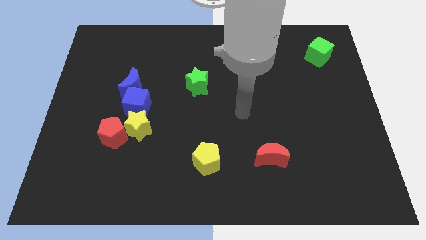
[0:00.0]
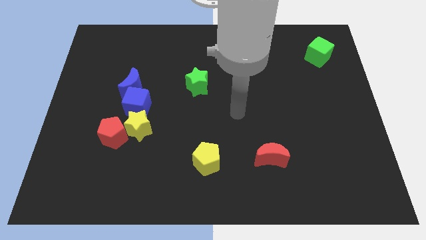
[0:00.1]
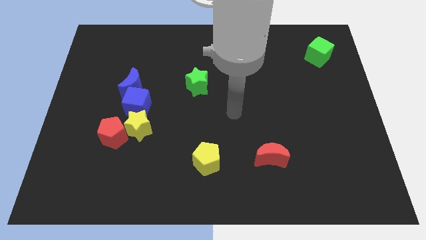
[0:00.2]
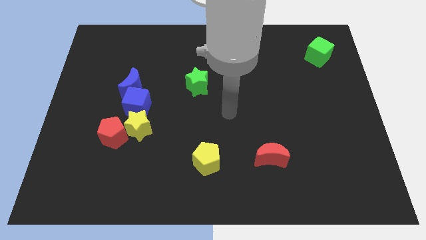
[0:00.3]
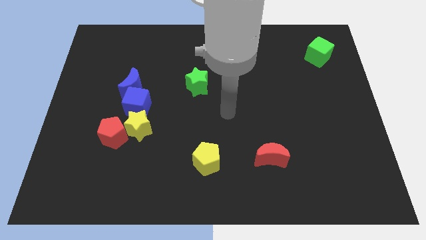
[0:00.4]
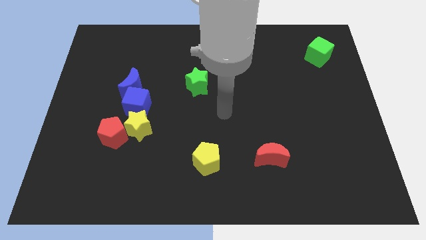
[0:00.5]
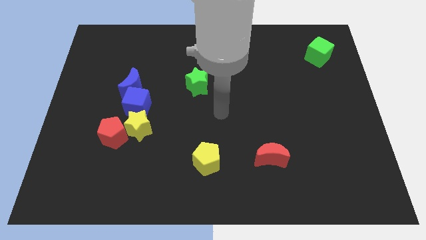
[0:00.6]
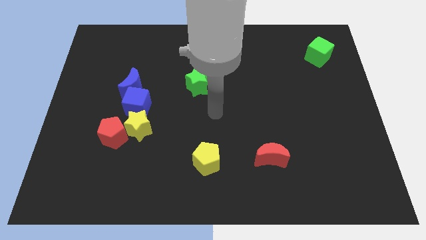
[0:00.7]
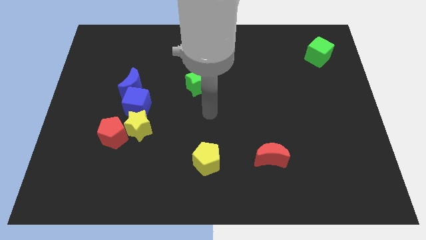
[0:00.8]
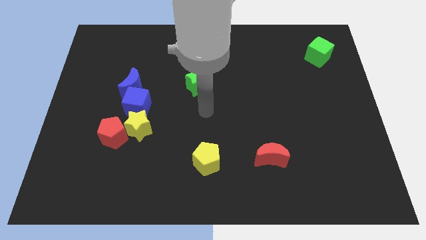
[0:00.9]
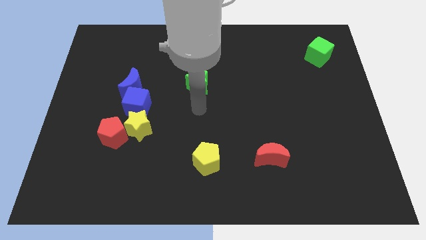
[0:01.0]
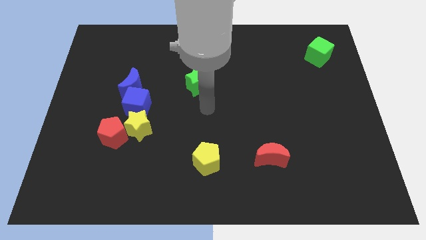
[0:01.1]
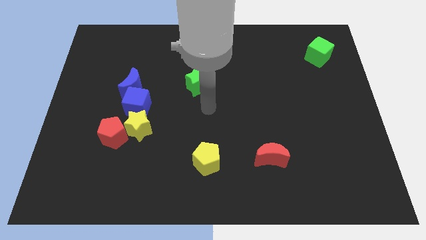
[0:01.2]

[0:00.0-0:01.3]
move the arm above the yellow pentagon

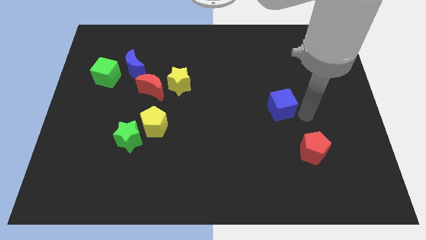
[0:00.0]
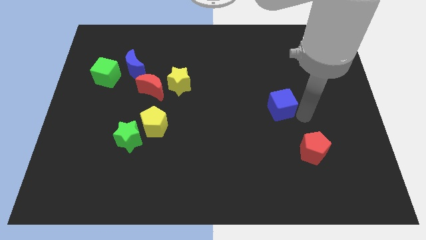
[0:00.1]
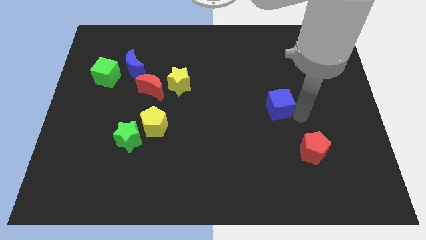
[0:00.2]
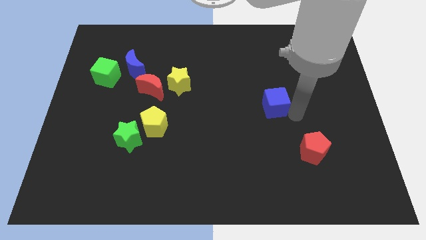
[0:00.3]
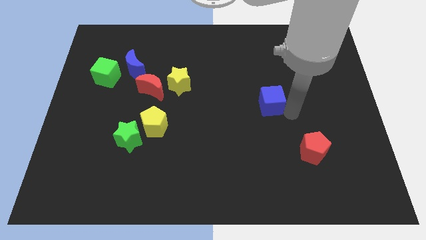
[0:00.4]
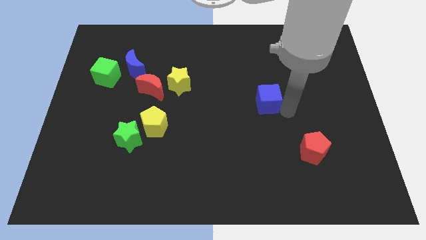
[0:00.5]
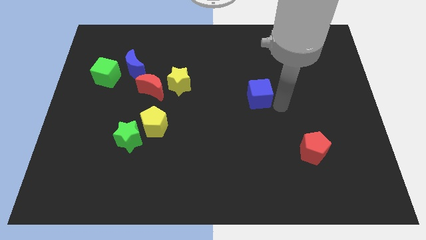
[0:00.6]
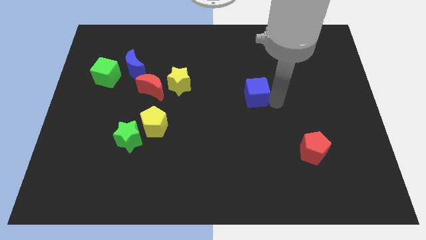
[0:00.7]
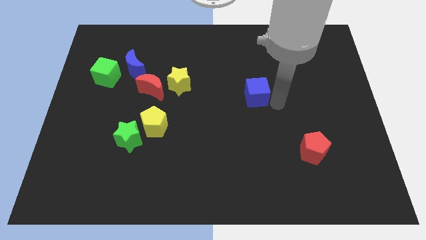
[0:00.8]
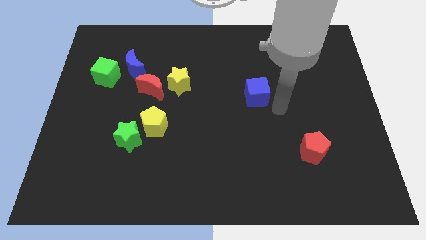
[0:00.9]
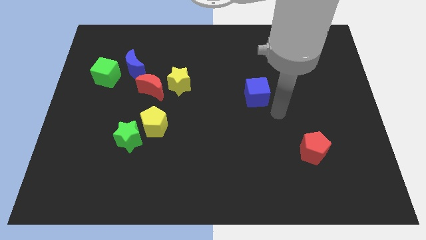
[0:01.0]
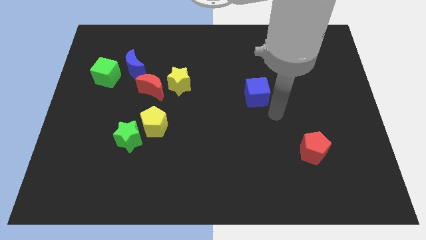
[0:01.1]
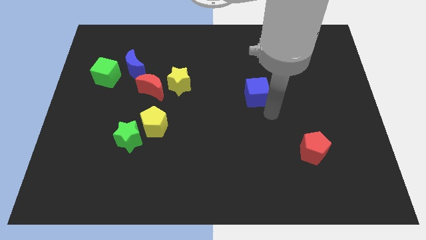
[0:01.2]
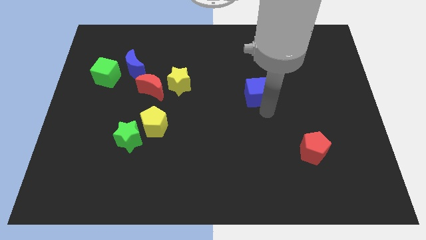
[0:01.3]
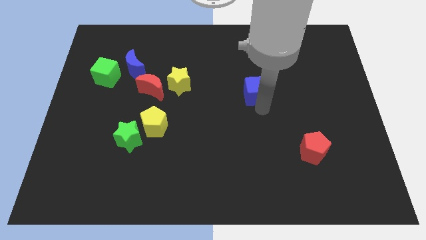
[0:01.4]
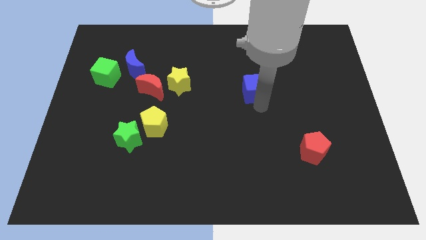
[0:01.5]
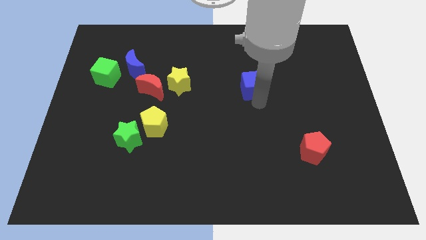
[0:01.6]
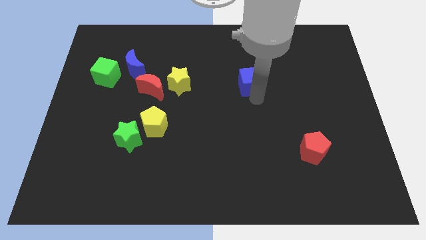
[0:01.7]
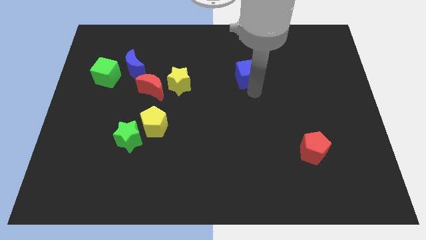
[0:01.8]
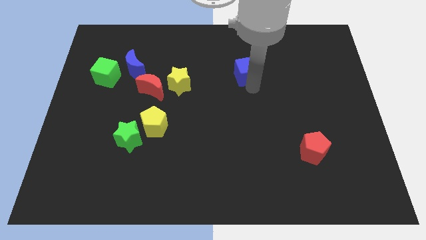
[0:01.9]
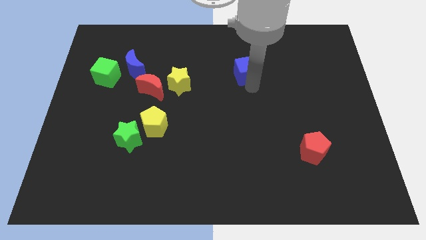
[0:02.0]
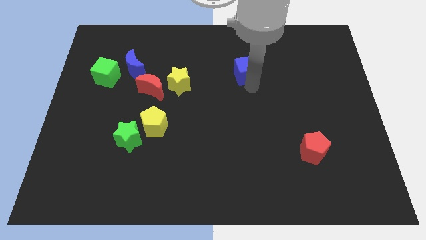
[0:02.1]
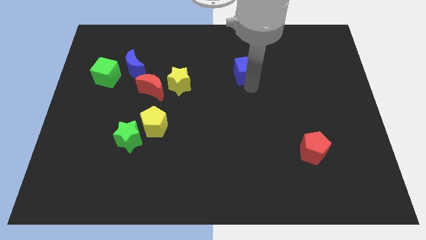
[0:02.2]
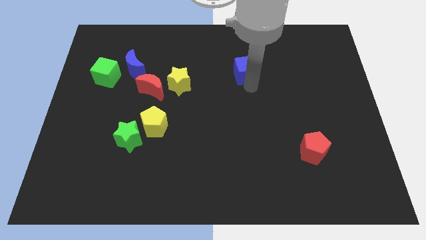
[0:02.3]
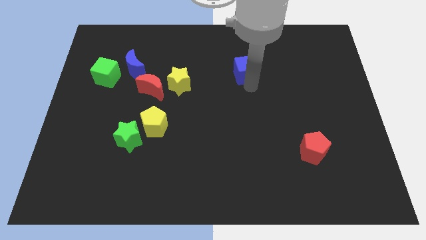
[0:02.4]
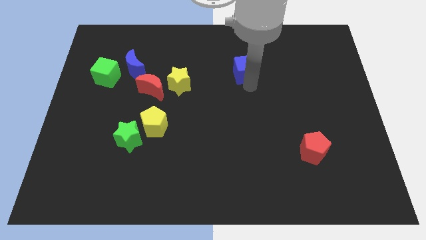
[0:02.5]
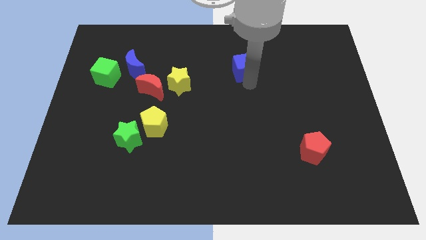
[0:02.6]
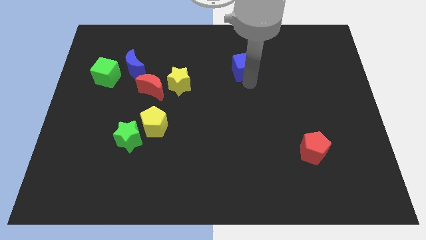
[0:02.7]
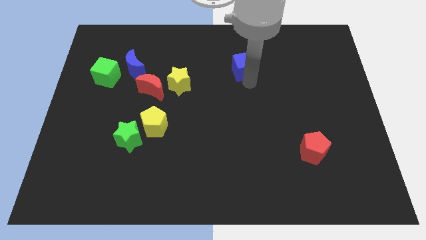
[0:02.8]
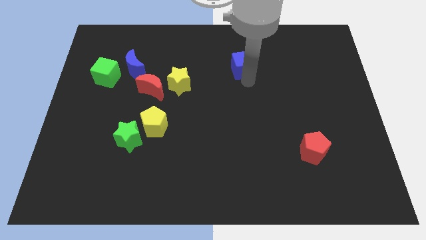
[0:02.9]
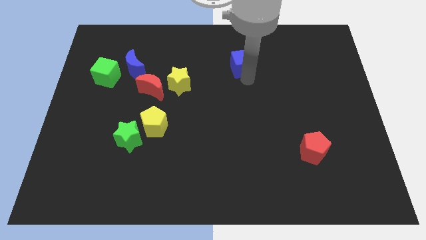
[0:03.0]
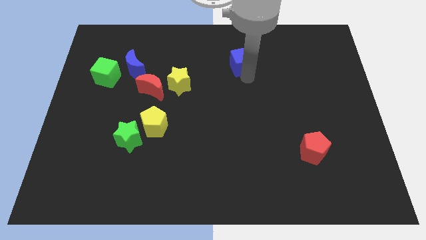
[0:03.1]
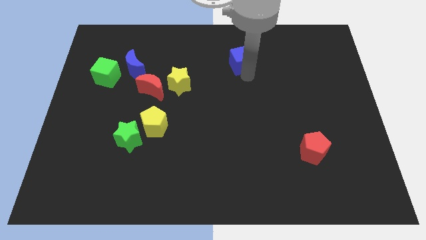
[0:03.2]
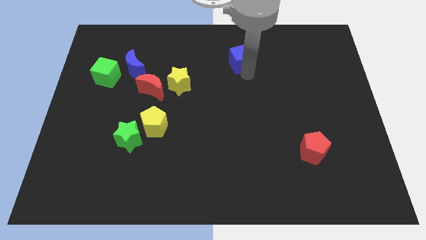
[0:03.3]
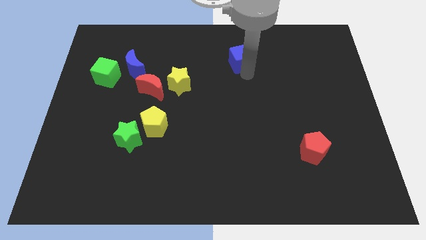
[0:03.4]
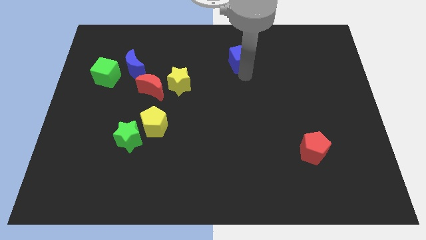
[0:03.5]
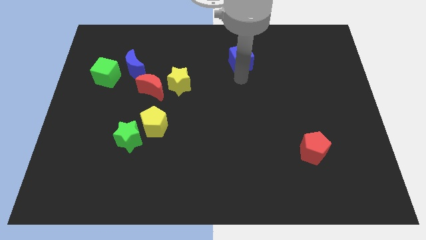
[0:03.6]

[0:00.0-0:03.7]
push the blue cube to the top right of the yellow star

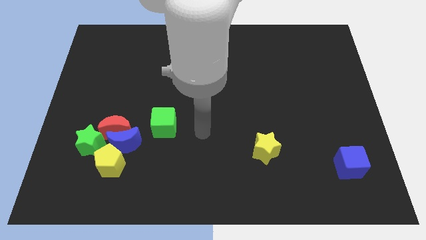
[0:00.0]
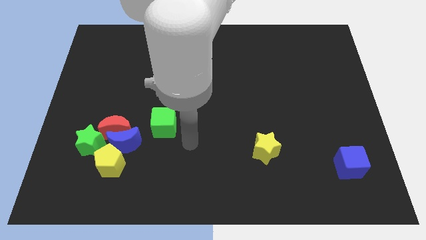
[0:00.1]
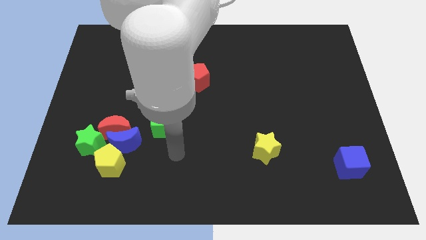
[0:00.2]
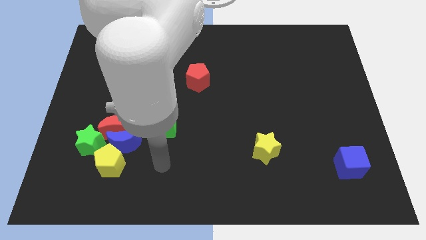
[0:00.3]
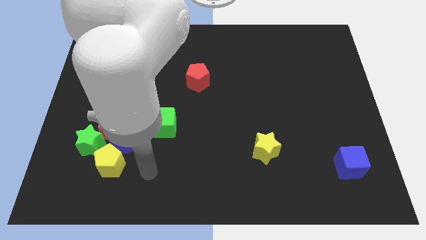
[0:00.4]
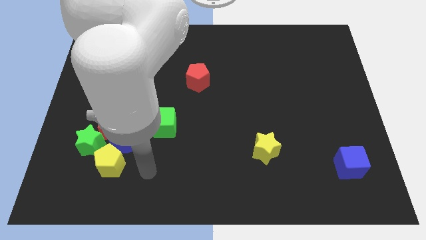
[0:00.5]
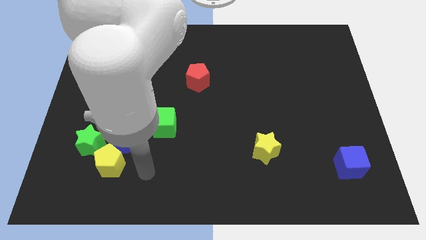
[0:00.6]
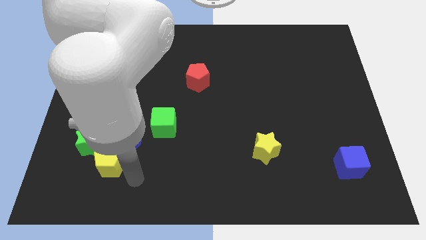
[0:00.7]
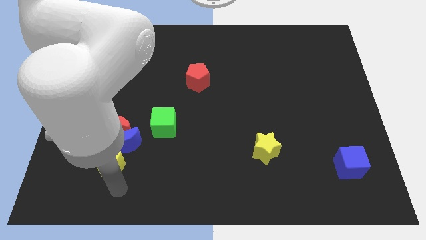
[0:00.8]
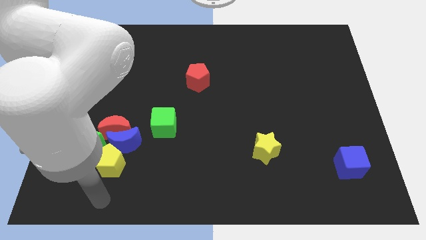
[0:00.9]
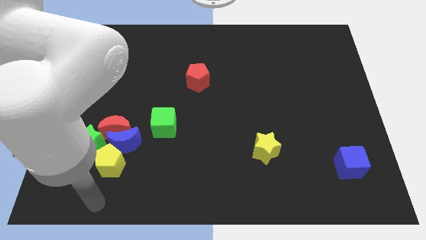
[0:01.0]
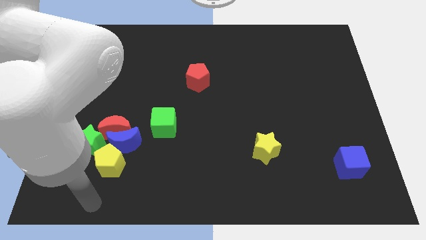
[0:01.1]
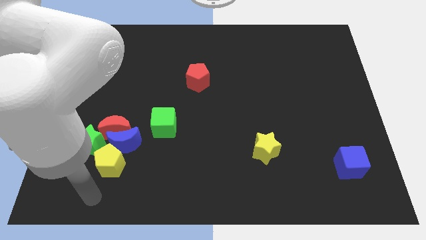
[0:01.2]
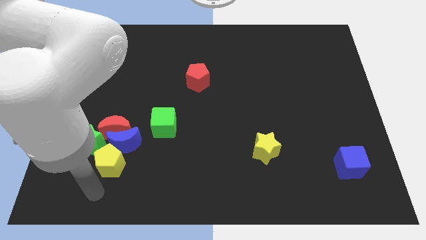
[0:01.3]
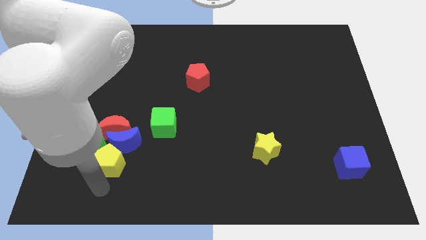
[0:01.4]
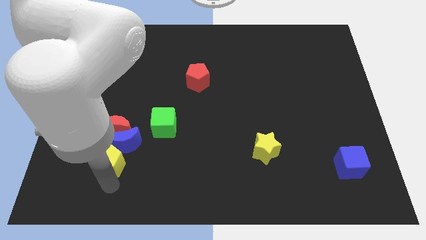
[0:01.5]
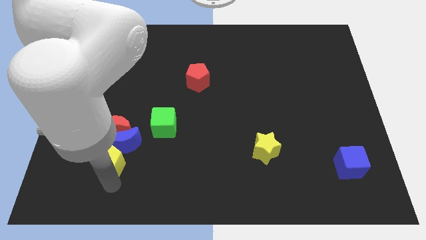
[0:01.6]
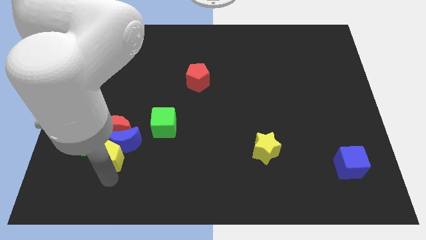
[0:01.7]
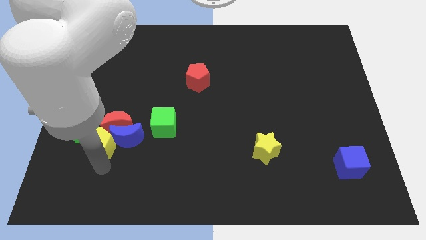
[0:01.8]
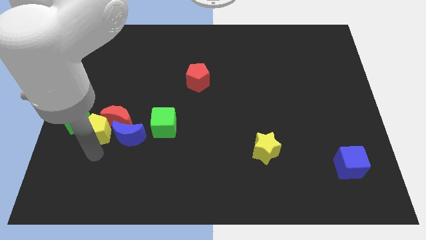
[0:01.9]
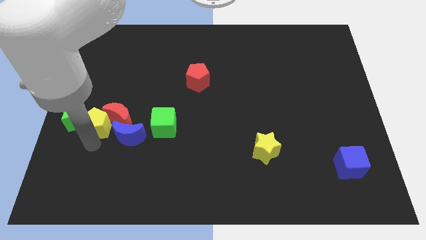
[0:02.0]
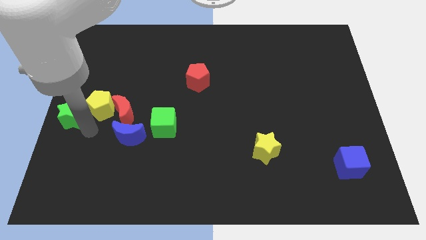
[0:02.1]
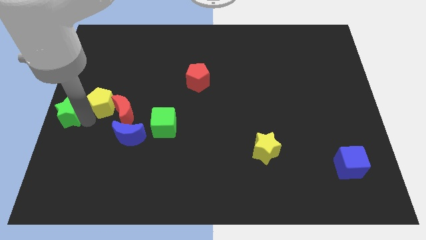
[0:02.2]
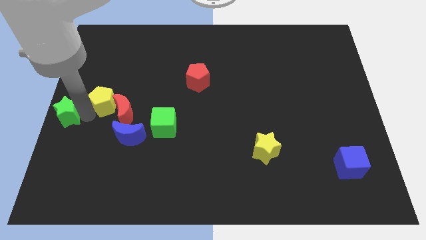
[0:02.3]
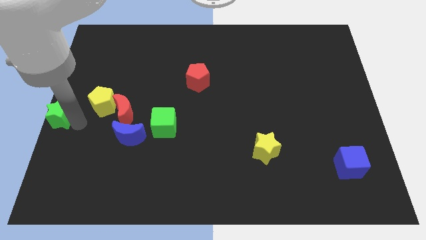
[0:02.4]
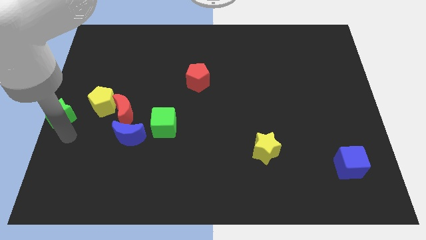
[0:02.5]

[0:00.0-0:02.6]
push yellow pentagon in to red crescent

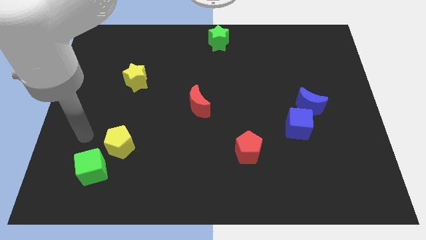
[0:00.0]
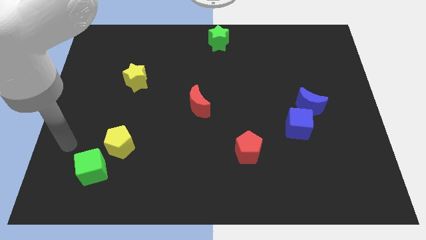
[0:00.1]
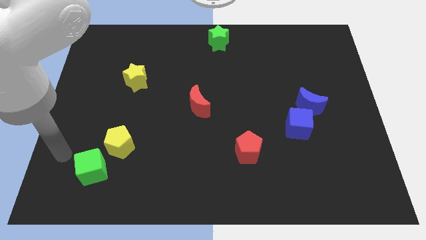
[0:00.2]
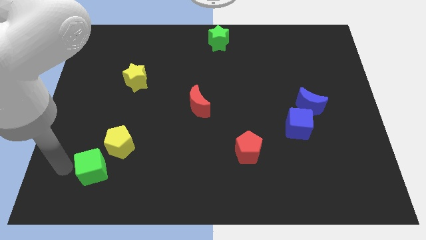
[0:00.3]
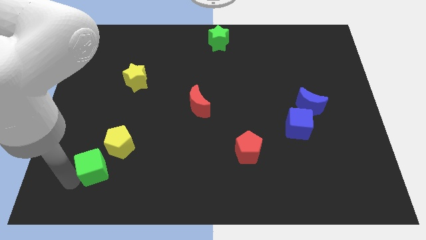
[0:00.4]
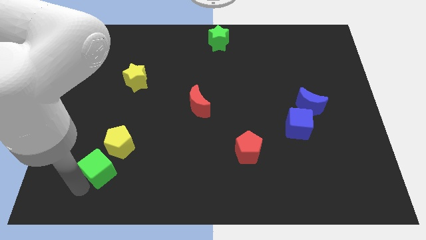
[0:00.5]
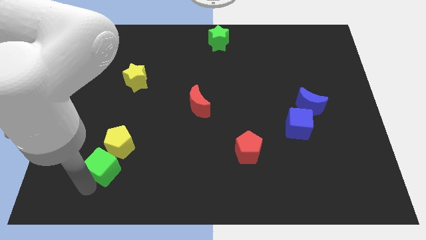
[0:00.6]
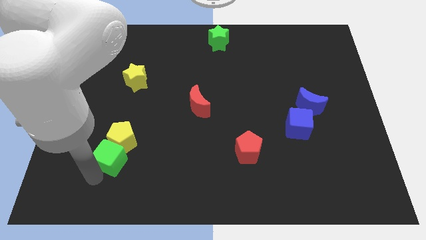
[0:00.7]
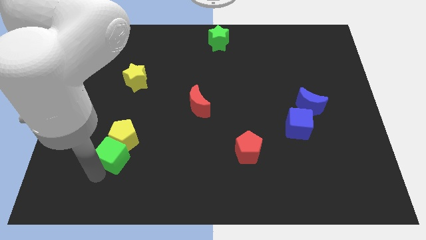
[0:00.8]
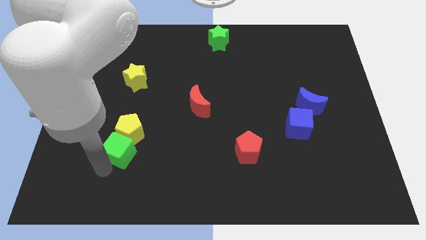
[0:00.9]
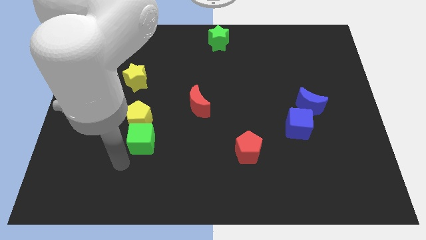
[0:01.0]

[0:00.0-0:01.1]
push the yellow pentagon and green cube towards the top side of the board

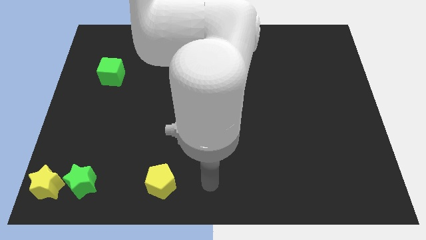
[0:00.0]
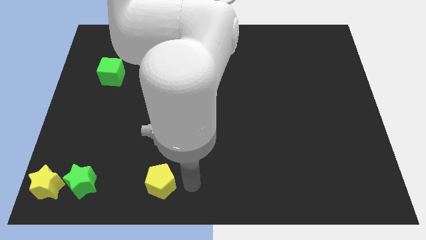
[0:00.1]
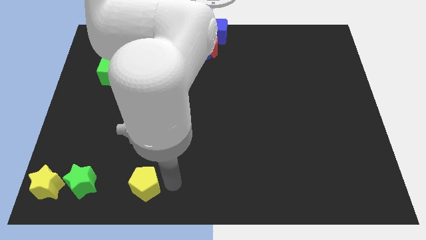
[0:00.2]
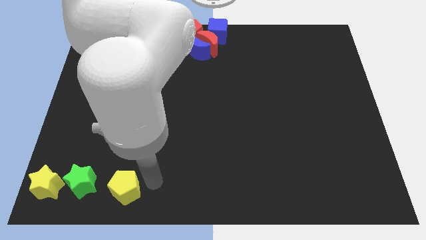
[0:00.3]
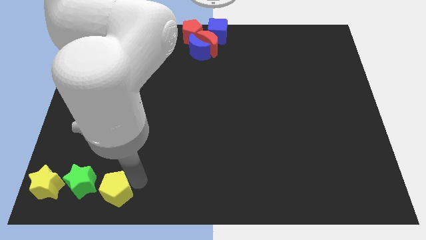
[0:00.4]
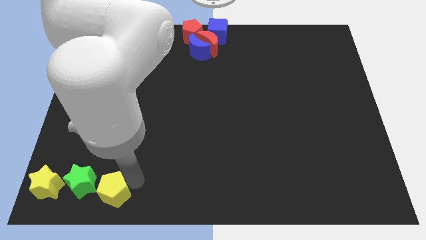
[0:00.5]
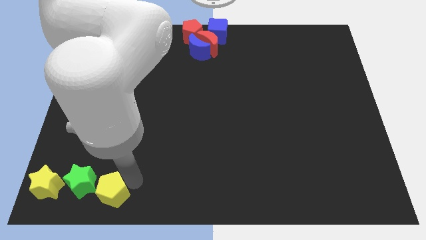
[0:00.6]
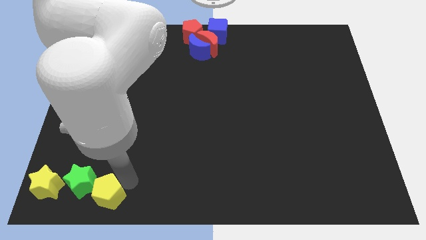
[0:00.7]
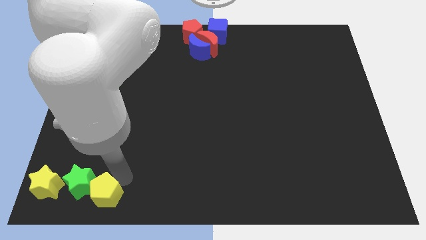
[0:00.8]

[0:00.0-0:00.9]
slide the yellow pentagon right to the green star
